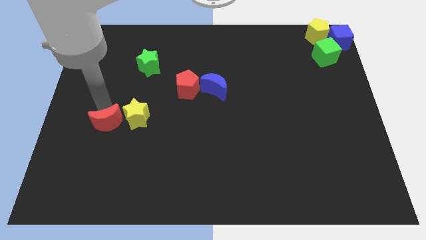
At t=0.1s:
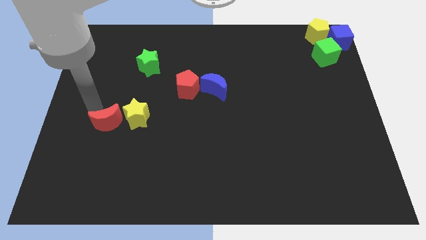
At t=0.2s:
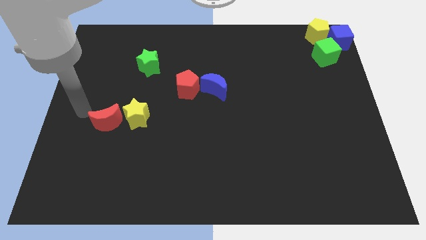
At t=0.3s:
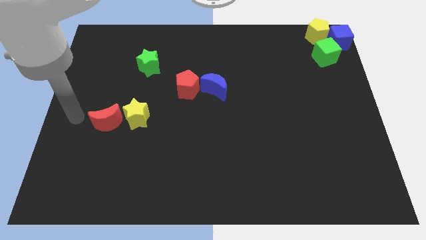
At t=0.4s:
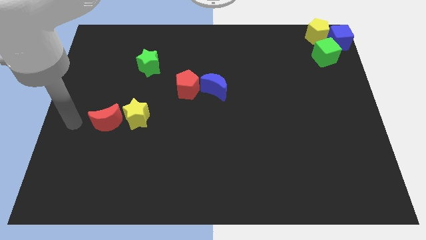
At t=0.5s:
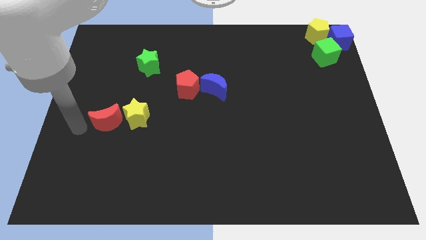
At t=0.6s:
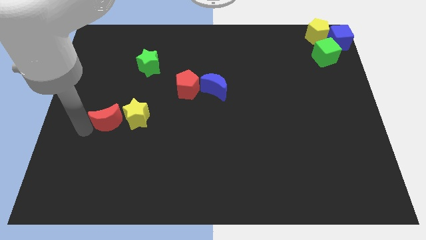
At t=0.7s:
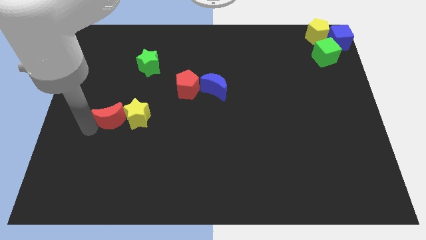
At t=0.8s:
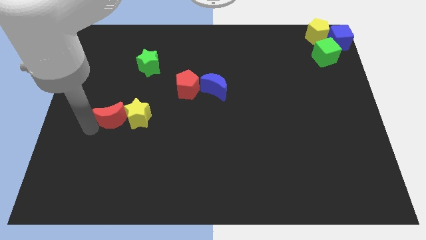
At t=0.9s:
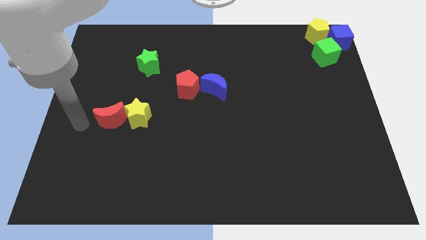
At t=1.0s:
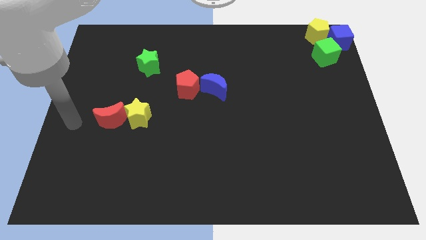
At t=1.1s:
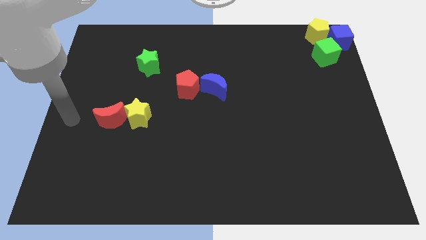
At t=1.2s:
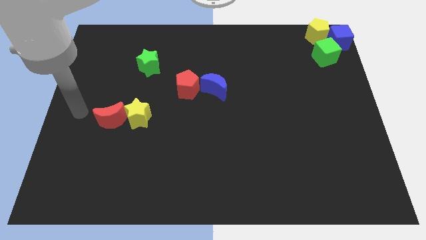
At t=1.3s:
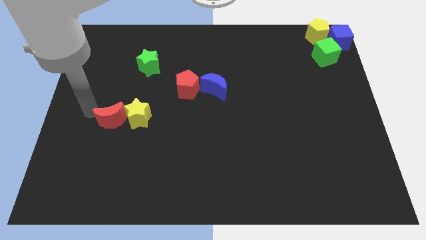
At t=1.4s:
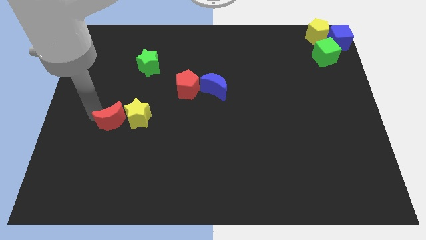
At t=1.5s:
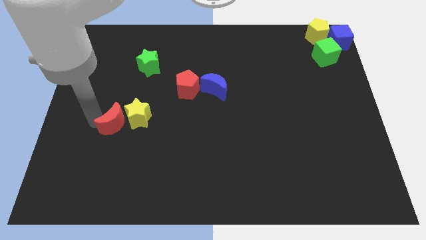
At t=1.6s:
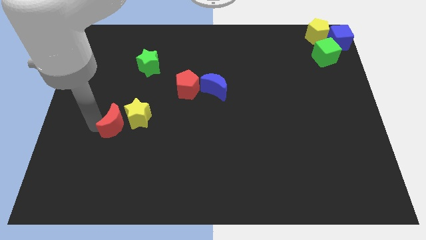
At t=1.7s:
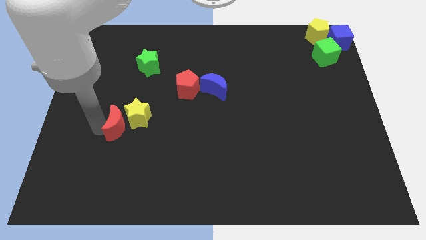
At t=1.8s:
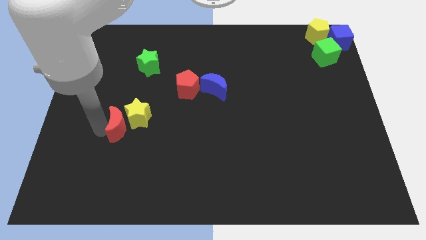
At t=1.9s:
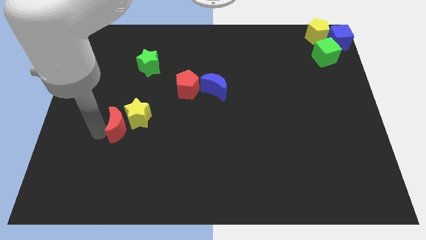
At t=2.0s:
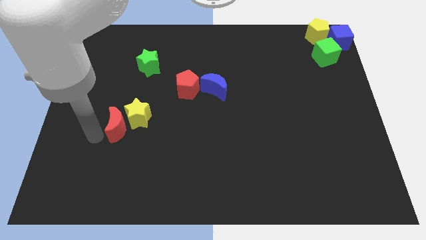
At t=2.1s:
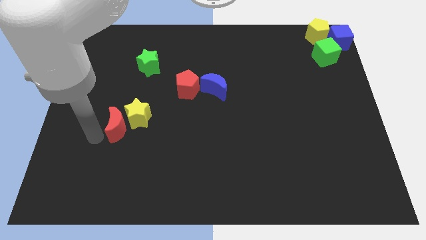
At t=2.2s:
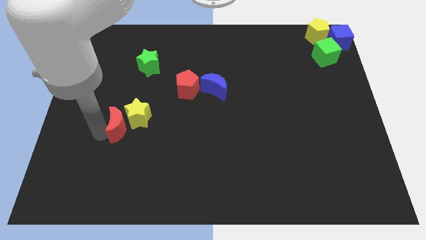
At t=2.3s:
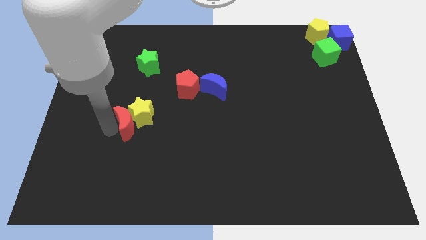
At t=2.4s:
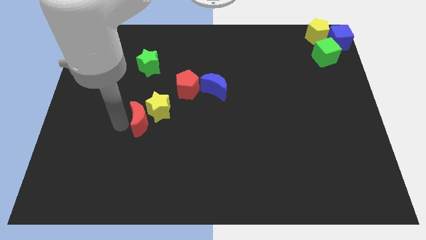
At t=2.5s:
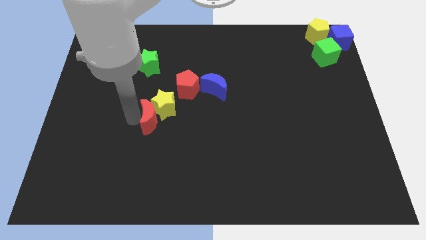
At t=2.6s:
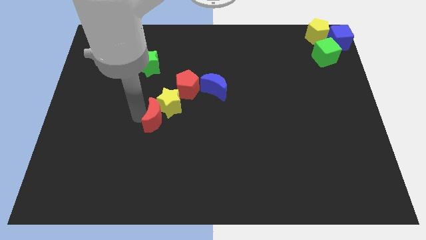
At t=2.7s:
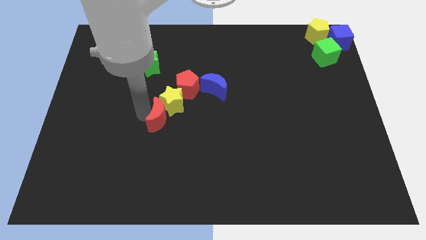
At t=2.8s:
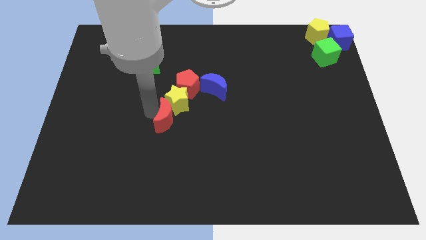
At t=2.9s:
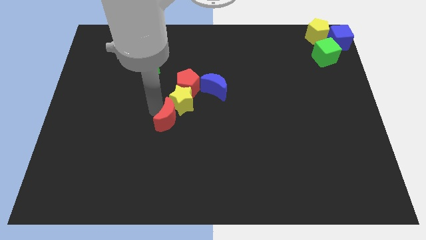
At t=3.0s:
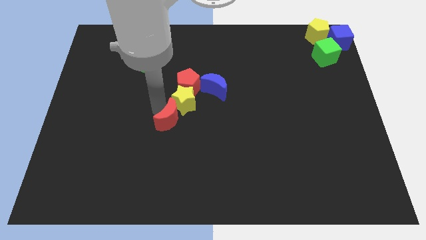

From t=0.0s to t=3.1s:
push the yellow star with the red crescent into the red pentagon

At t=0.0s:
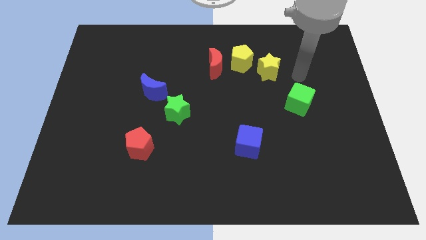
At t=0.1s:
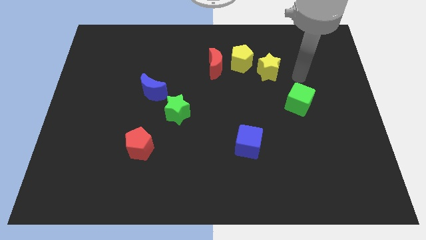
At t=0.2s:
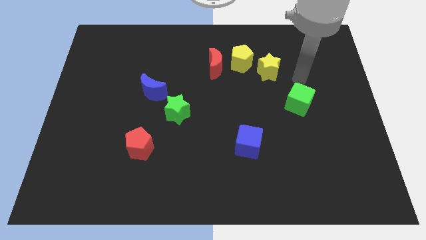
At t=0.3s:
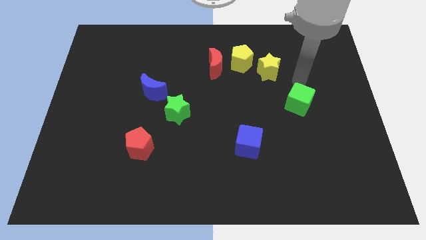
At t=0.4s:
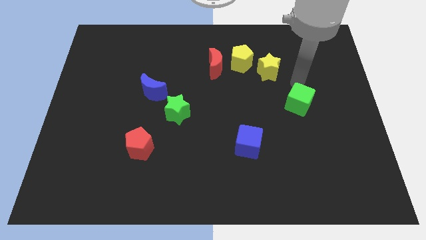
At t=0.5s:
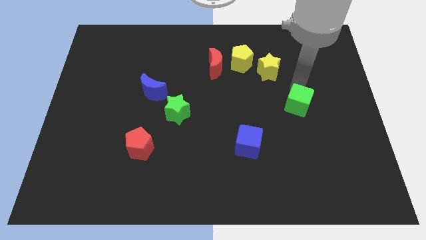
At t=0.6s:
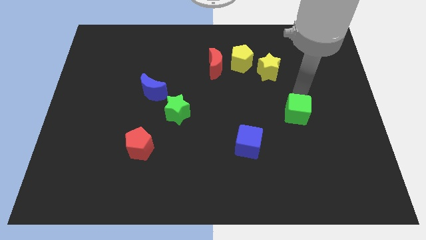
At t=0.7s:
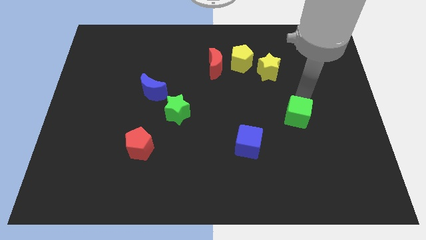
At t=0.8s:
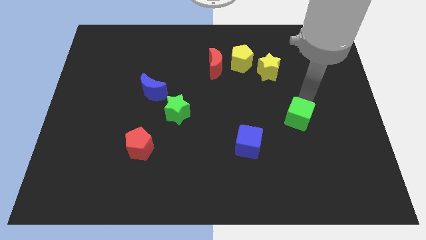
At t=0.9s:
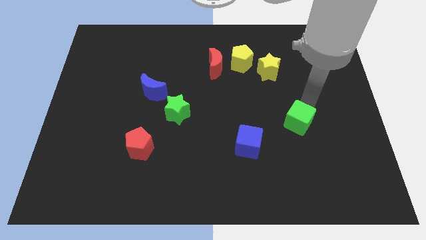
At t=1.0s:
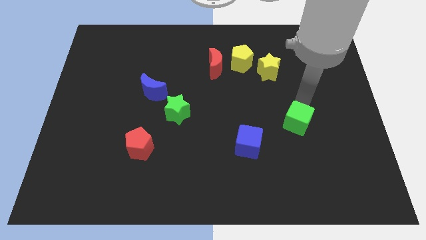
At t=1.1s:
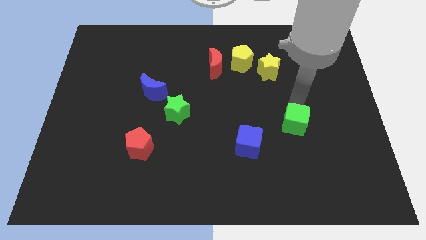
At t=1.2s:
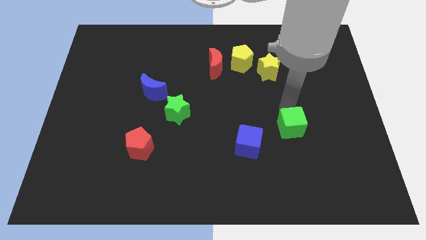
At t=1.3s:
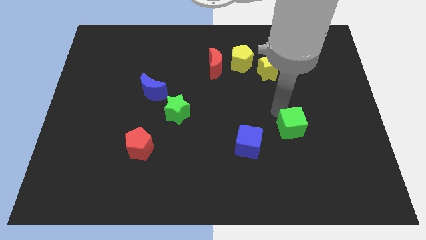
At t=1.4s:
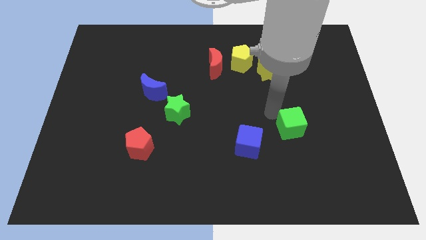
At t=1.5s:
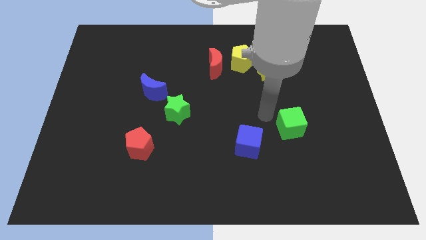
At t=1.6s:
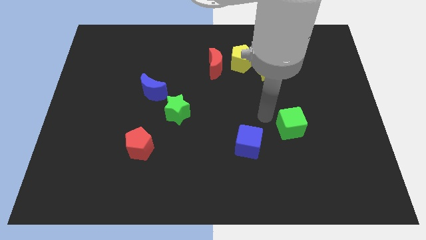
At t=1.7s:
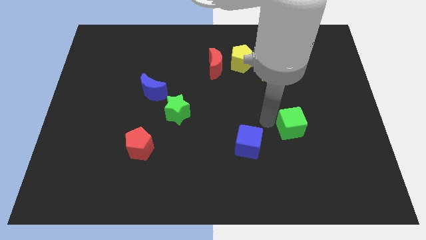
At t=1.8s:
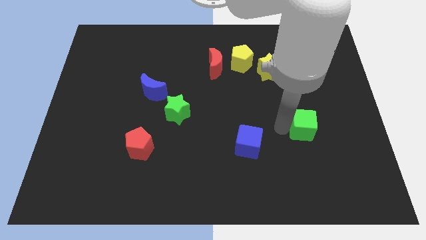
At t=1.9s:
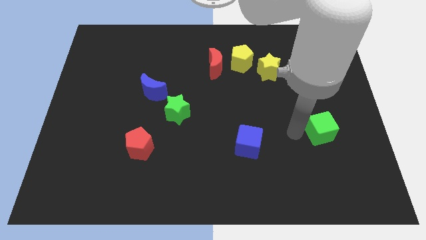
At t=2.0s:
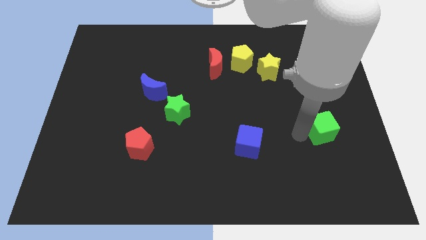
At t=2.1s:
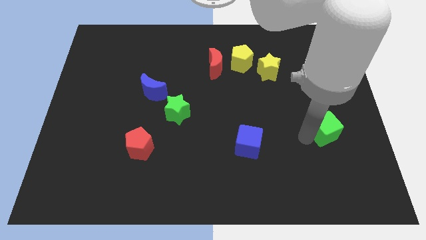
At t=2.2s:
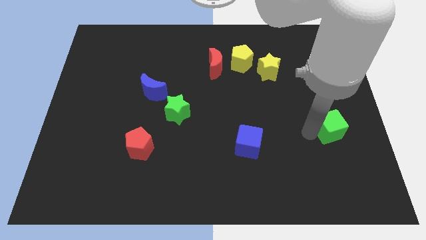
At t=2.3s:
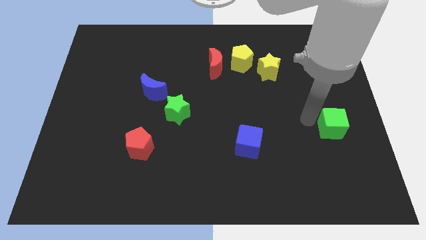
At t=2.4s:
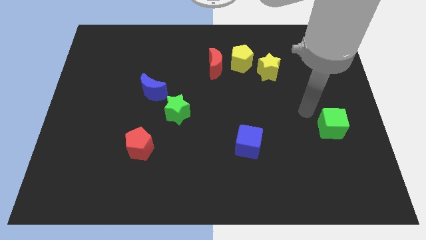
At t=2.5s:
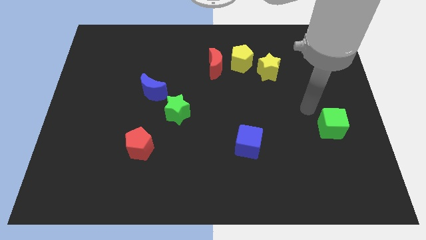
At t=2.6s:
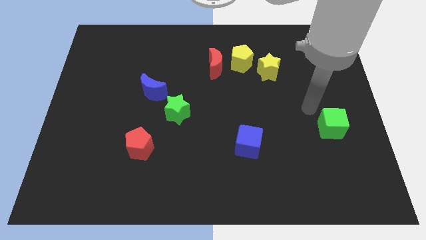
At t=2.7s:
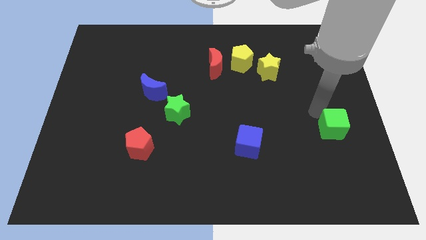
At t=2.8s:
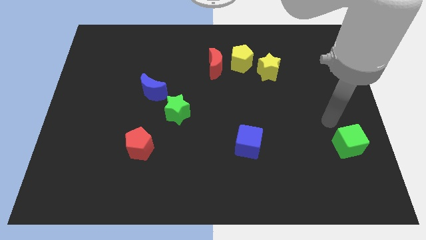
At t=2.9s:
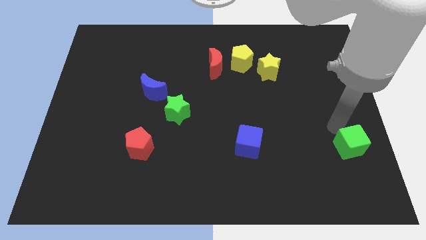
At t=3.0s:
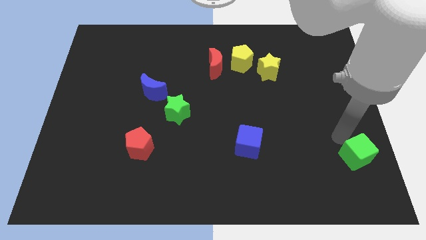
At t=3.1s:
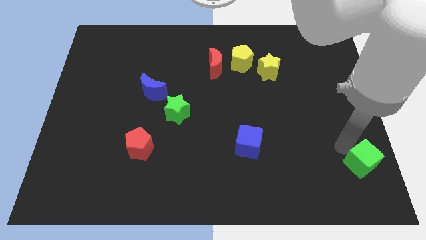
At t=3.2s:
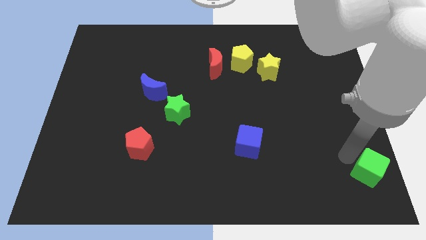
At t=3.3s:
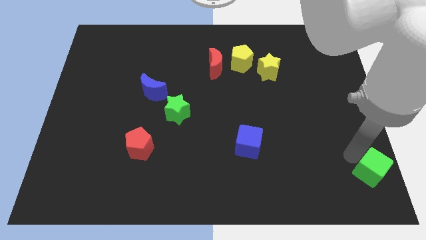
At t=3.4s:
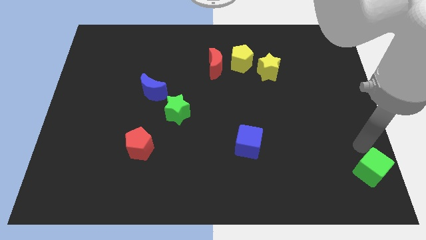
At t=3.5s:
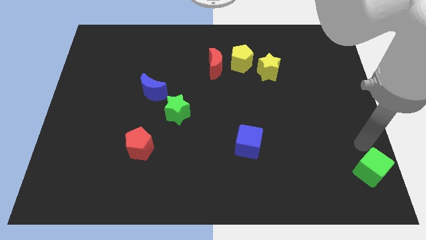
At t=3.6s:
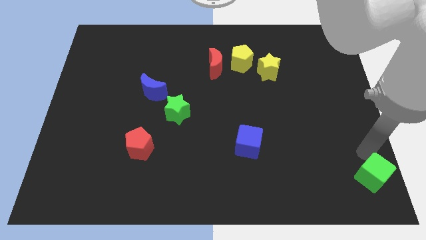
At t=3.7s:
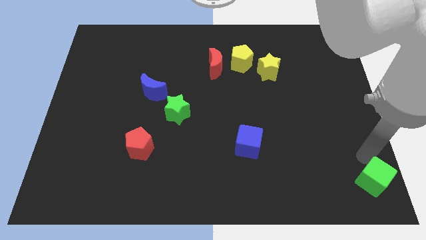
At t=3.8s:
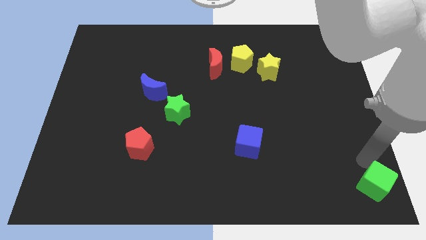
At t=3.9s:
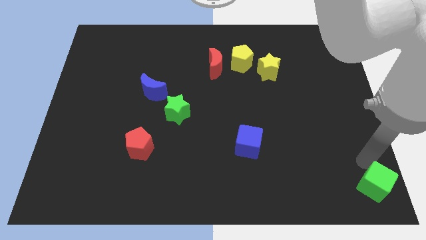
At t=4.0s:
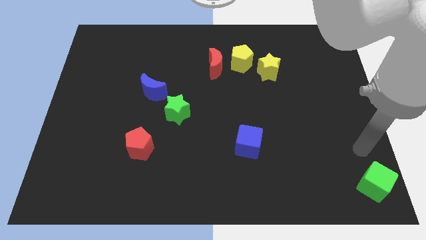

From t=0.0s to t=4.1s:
place green cube towards bottom right corner

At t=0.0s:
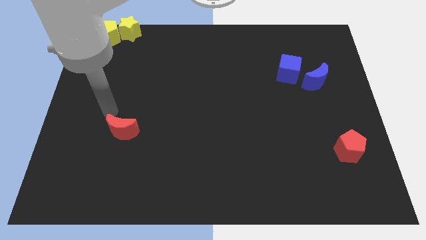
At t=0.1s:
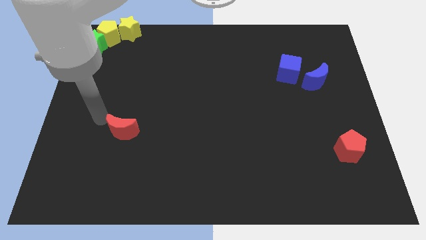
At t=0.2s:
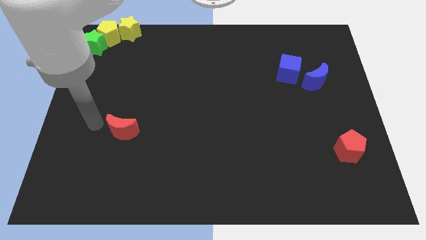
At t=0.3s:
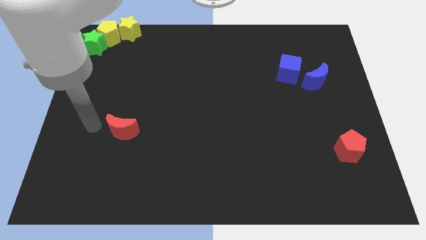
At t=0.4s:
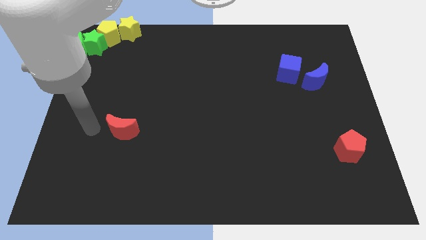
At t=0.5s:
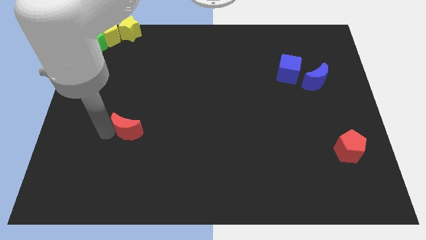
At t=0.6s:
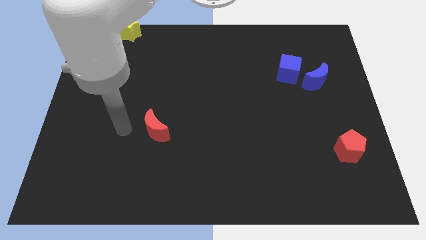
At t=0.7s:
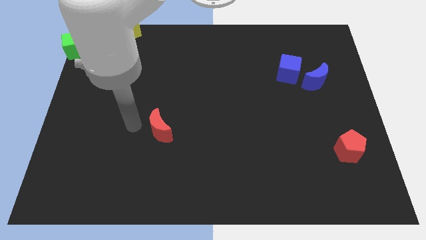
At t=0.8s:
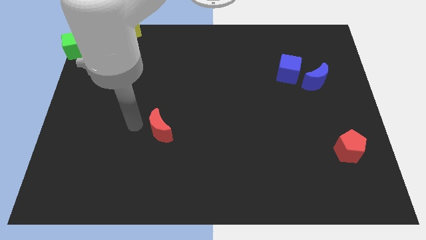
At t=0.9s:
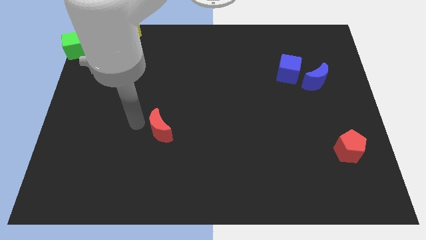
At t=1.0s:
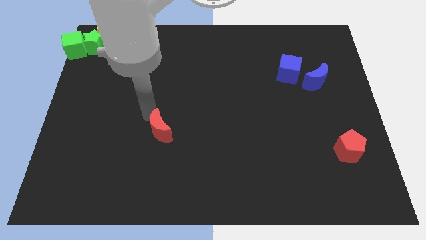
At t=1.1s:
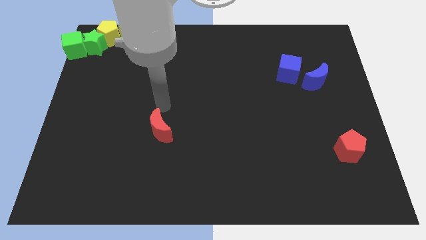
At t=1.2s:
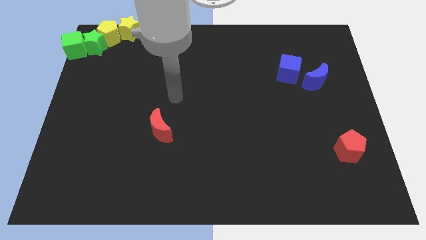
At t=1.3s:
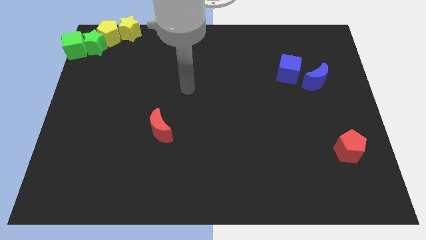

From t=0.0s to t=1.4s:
push the red moon towards the right side slightly

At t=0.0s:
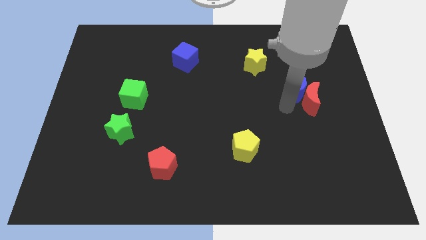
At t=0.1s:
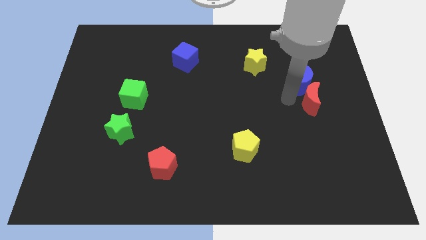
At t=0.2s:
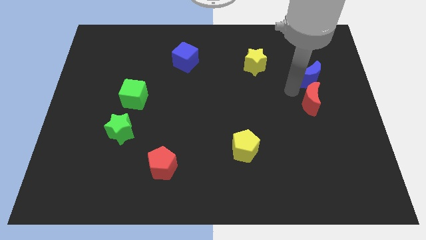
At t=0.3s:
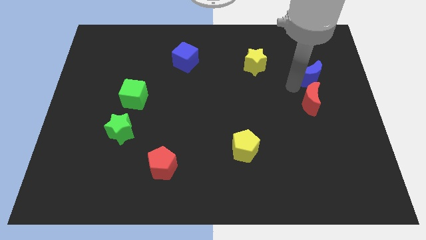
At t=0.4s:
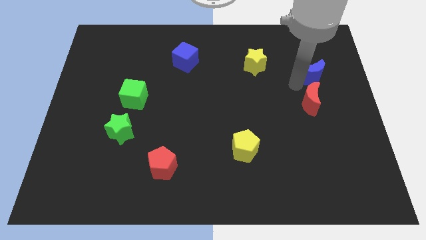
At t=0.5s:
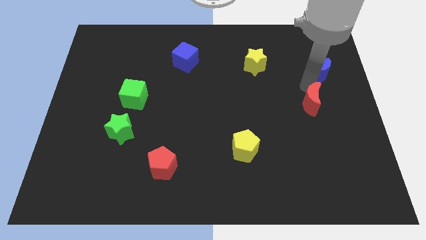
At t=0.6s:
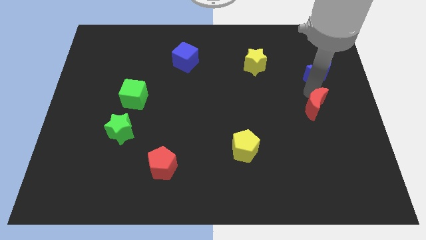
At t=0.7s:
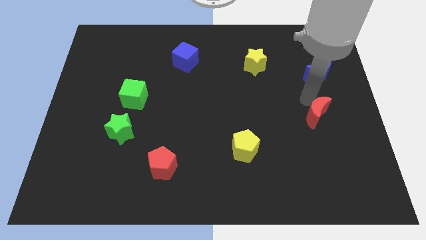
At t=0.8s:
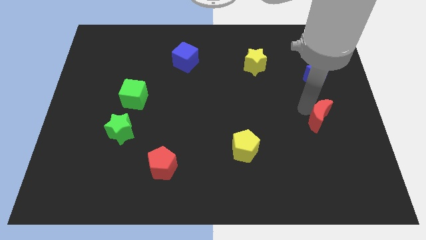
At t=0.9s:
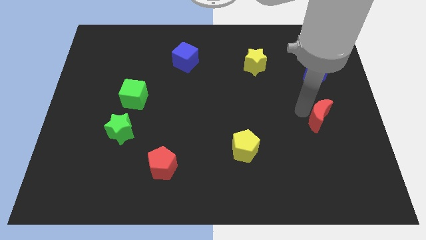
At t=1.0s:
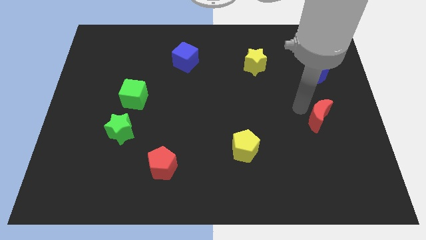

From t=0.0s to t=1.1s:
separate blue and red moons from each other
